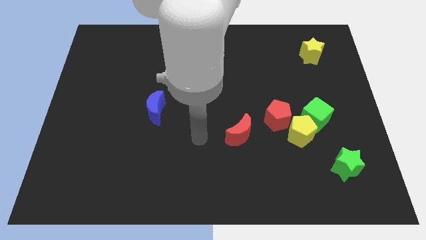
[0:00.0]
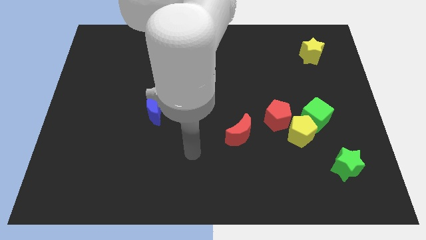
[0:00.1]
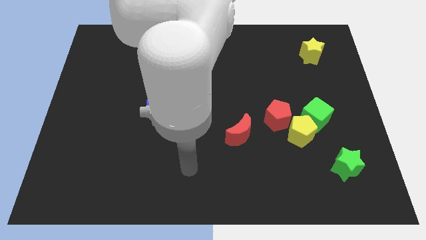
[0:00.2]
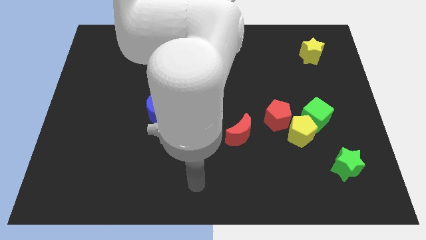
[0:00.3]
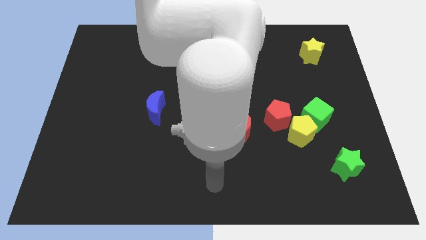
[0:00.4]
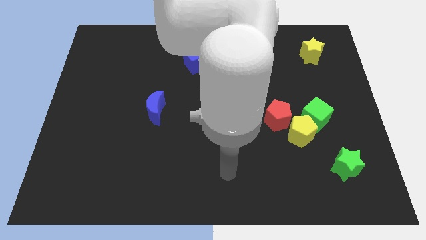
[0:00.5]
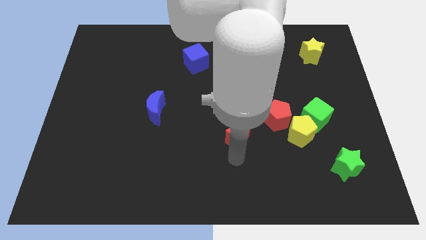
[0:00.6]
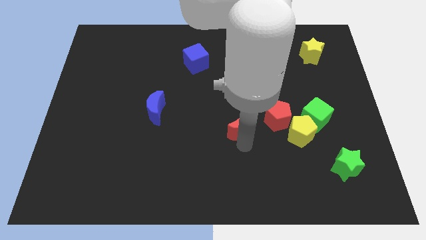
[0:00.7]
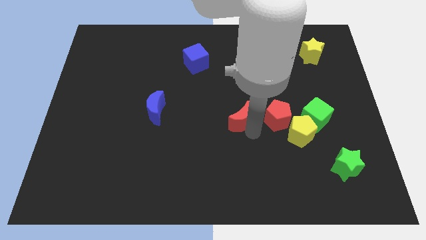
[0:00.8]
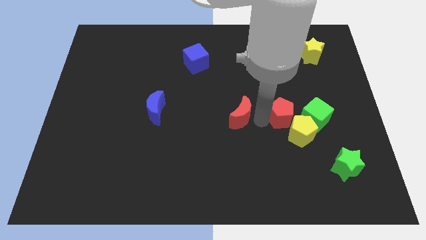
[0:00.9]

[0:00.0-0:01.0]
slightly move the red moon upwards

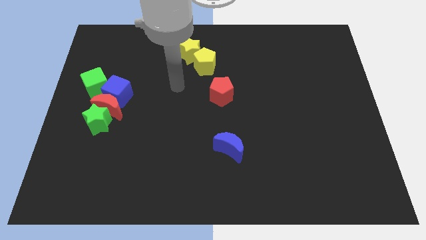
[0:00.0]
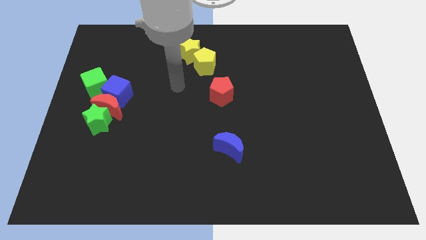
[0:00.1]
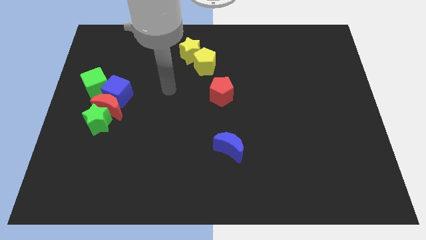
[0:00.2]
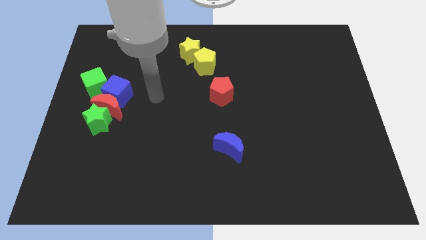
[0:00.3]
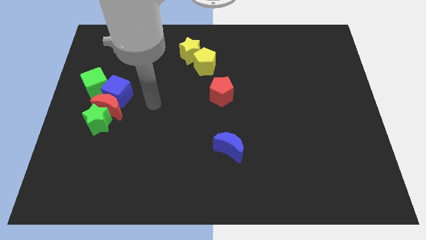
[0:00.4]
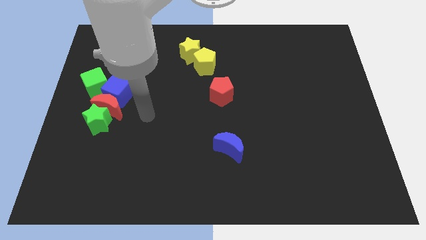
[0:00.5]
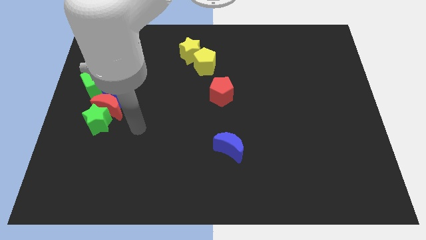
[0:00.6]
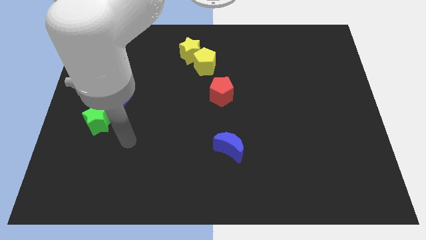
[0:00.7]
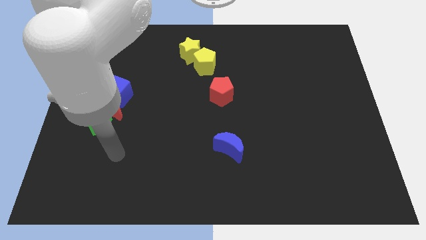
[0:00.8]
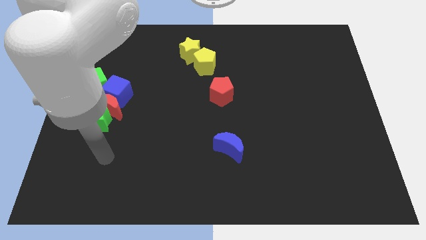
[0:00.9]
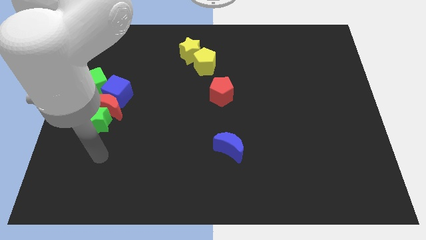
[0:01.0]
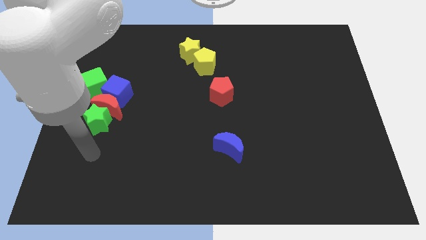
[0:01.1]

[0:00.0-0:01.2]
move your arm to the bottom side of the green star

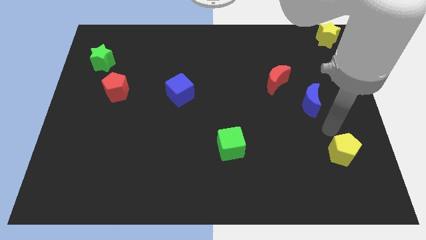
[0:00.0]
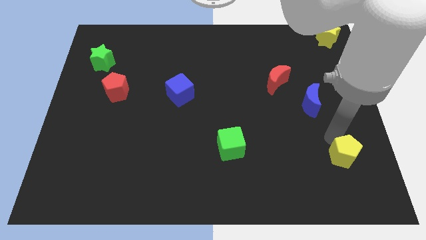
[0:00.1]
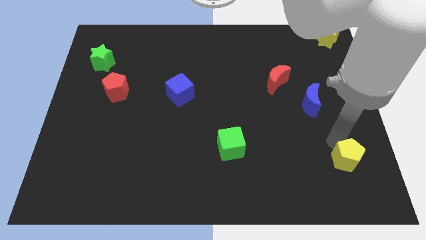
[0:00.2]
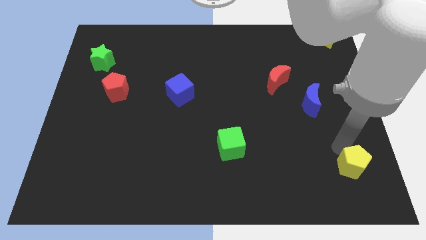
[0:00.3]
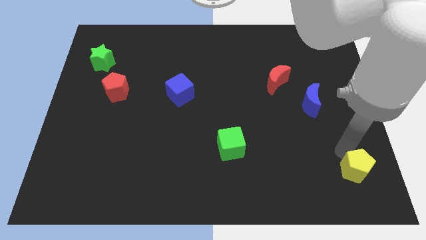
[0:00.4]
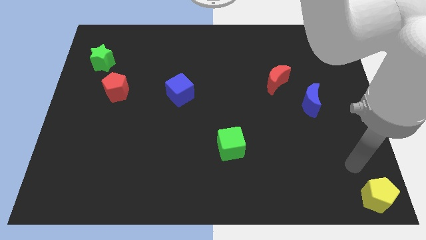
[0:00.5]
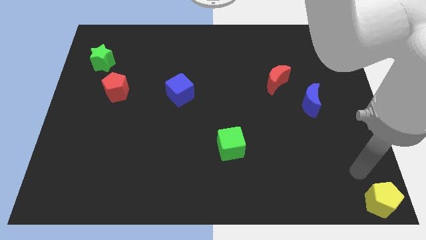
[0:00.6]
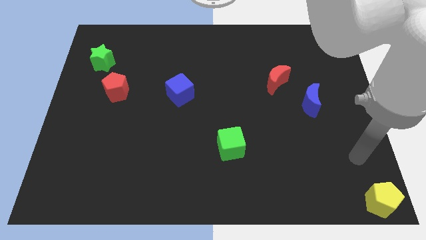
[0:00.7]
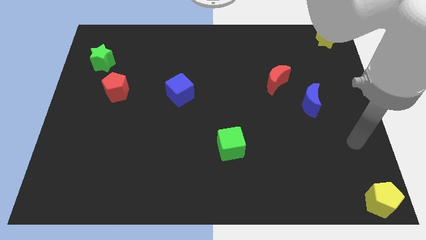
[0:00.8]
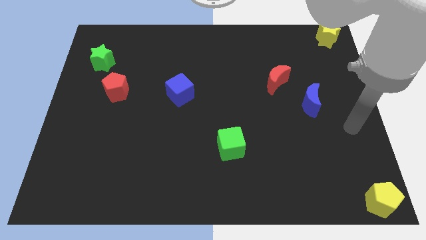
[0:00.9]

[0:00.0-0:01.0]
move the yellow pentagon to the bottom corner of the board

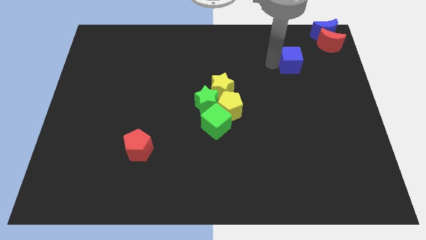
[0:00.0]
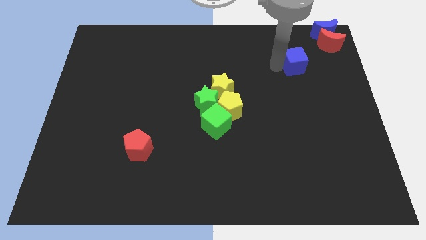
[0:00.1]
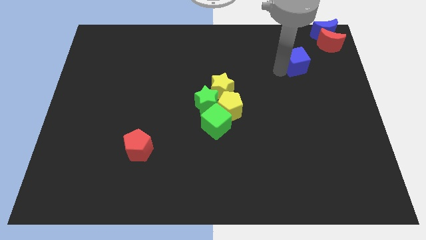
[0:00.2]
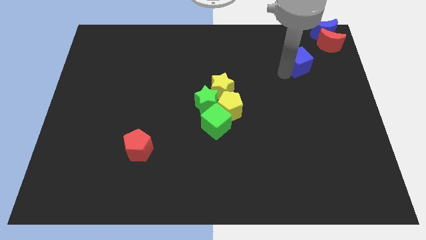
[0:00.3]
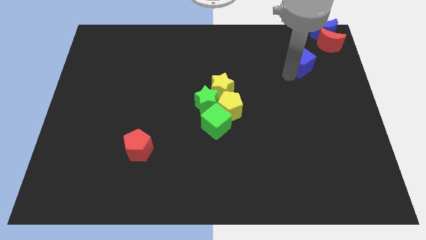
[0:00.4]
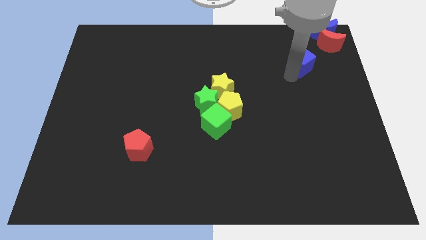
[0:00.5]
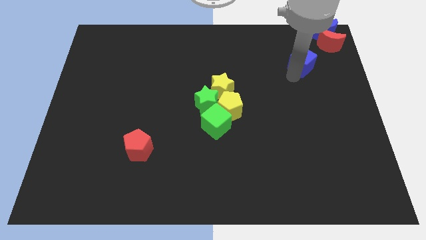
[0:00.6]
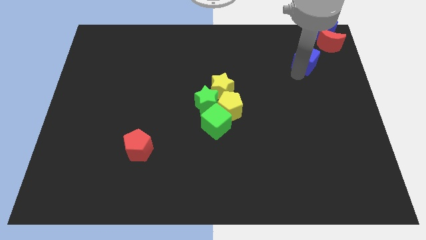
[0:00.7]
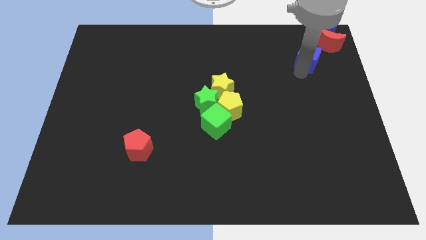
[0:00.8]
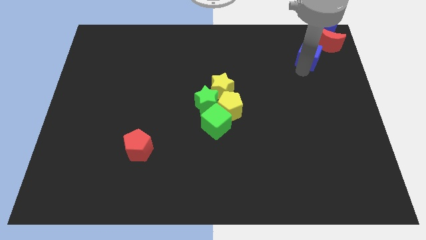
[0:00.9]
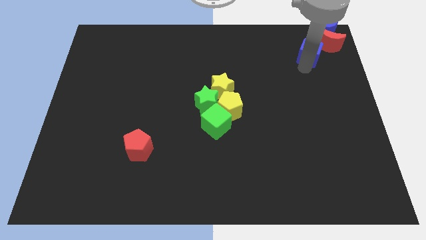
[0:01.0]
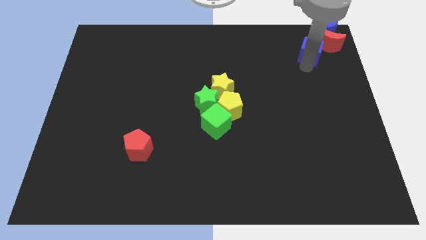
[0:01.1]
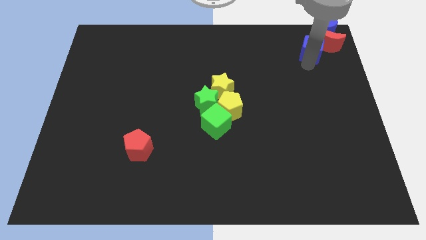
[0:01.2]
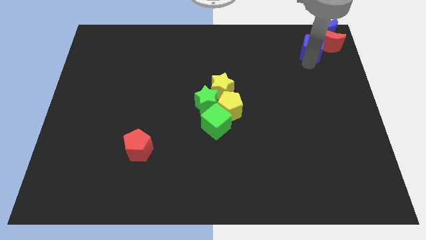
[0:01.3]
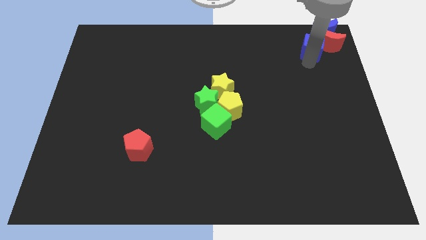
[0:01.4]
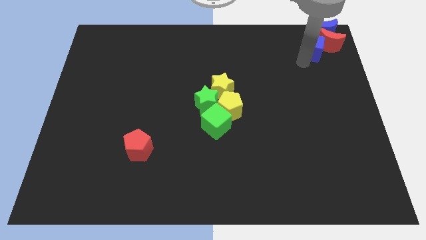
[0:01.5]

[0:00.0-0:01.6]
place the blue cube to the bottom left of the red crescent

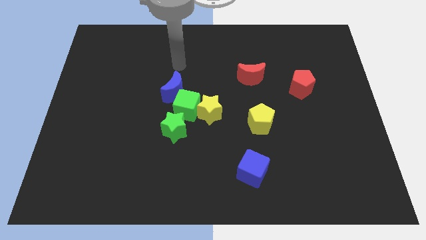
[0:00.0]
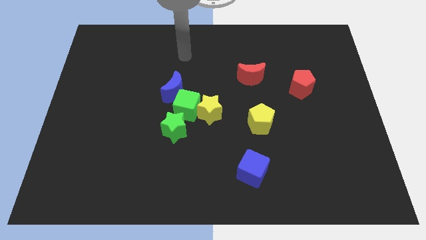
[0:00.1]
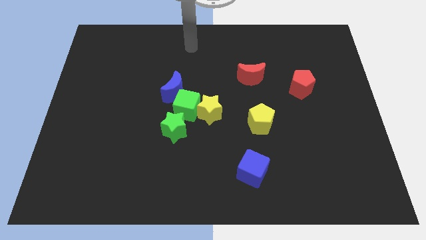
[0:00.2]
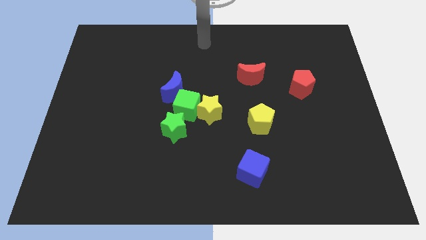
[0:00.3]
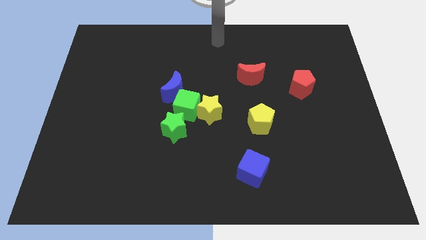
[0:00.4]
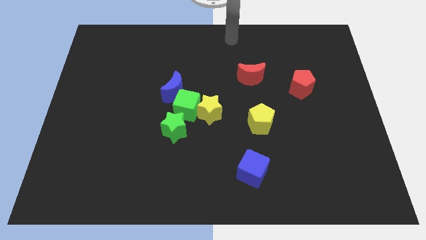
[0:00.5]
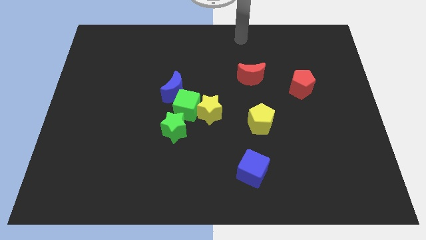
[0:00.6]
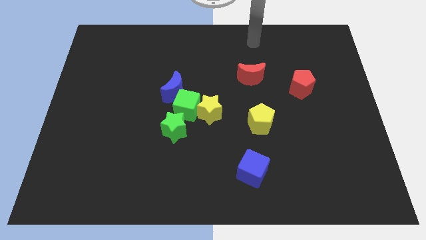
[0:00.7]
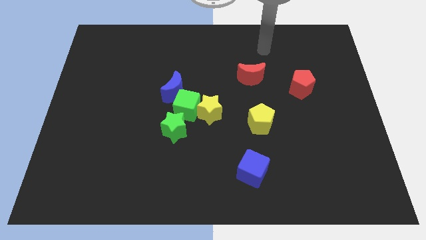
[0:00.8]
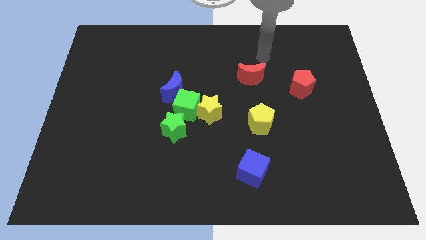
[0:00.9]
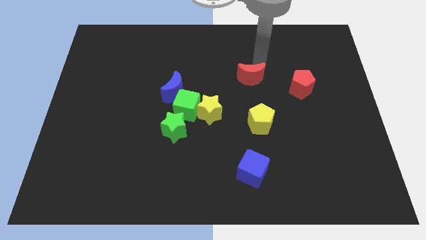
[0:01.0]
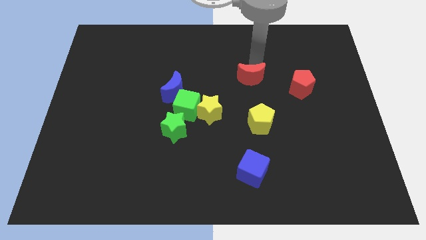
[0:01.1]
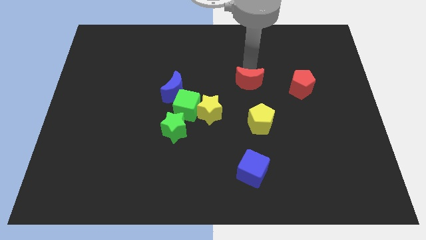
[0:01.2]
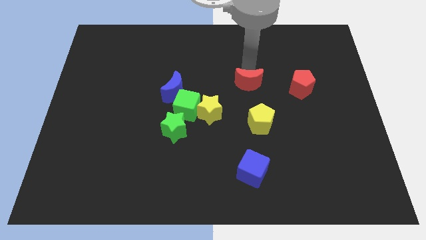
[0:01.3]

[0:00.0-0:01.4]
slide the red moon slightly to the bottom

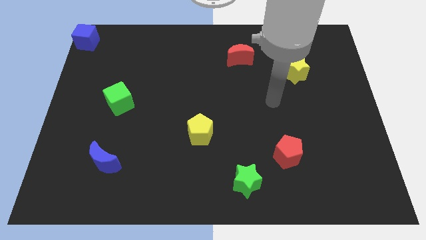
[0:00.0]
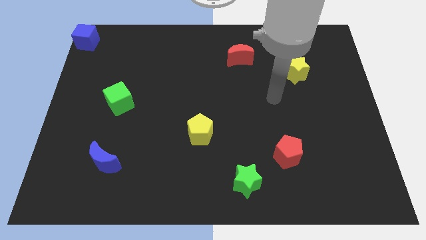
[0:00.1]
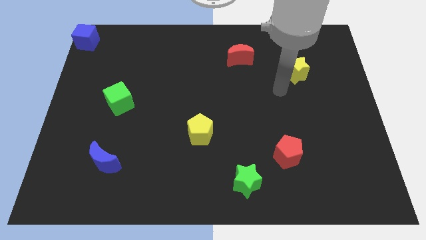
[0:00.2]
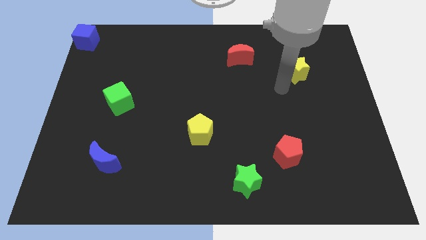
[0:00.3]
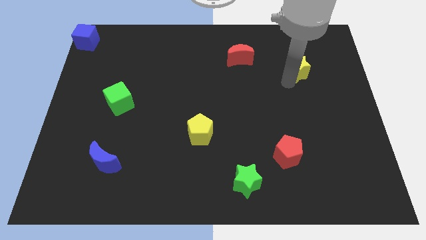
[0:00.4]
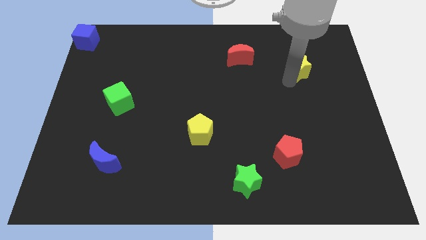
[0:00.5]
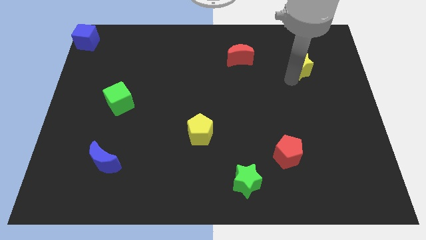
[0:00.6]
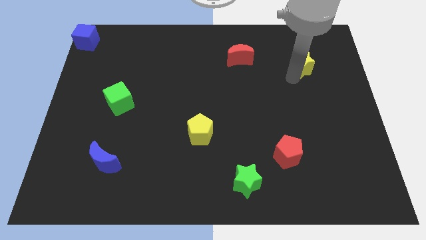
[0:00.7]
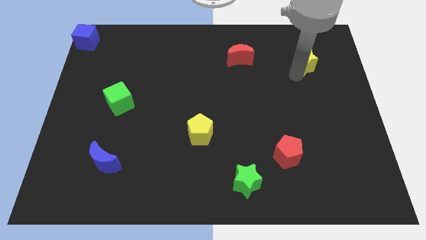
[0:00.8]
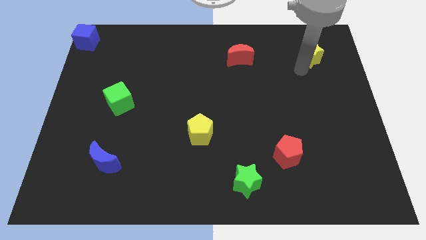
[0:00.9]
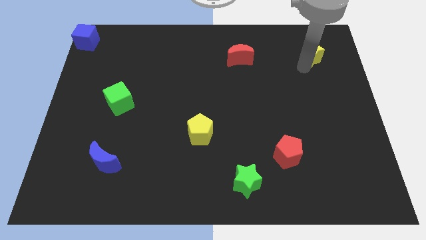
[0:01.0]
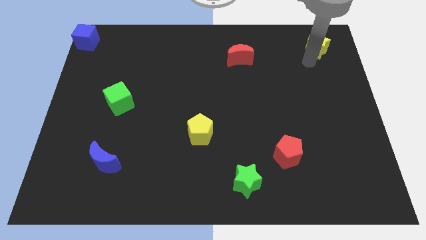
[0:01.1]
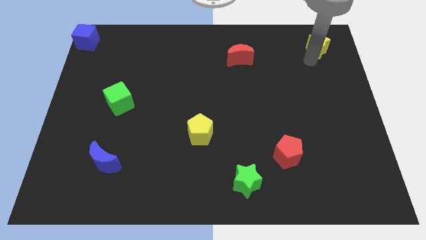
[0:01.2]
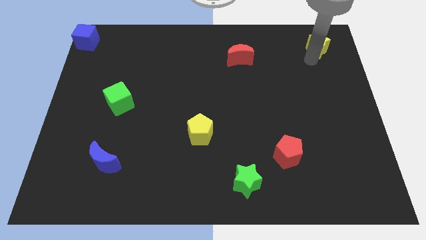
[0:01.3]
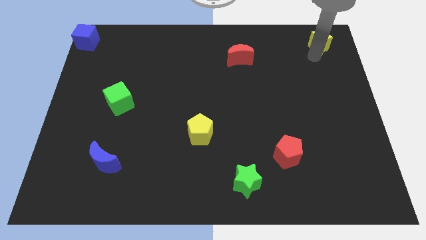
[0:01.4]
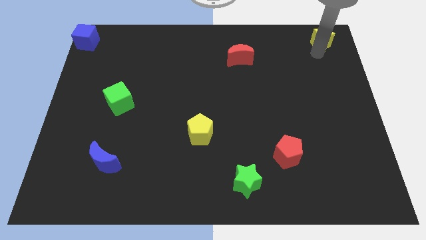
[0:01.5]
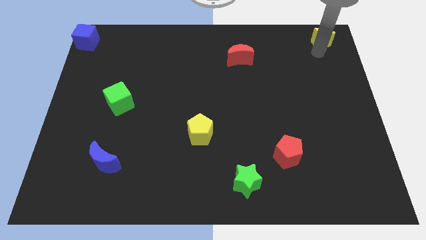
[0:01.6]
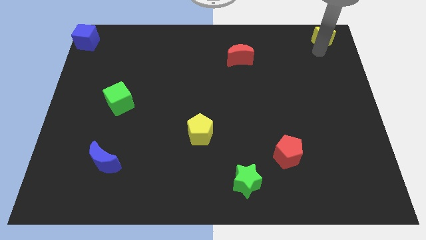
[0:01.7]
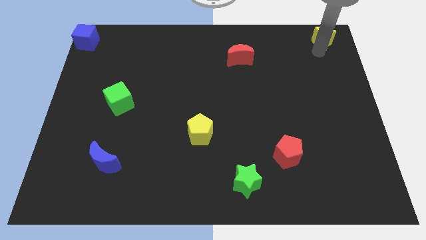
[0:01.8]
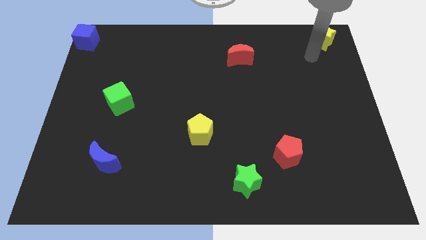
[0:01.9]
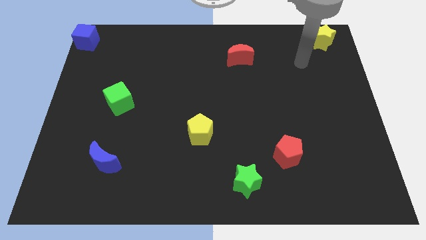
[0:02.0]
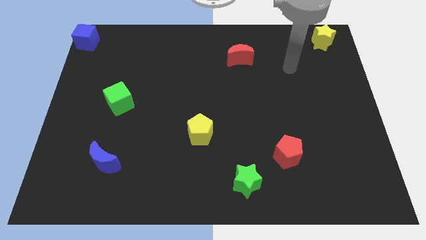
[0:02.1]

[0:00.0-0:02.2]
push the yellow star towards the top right side of the board

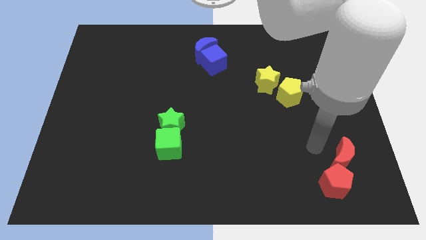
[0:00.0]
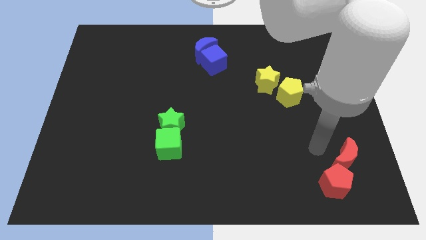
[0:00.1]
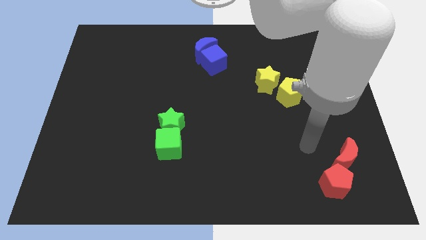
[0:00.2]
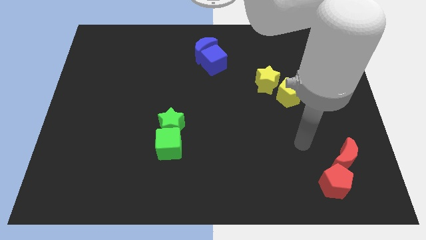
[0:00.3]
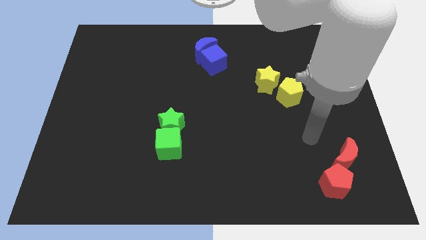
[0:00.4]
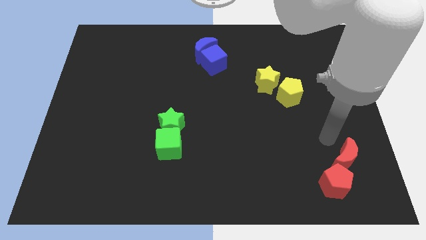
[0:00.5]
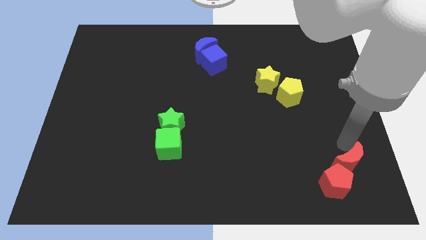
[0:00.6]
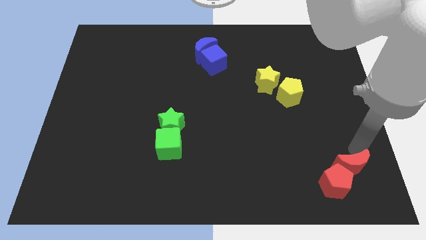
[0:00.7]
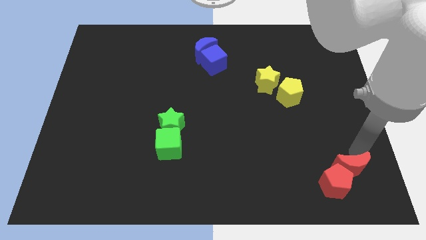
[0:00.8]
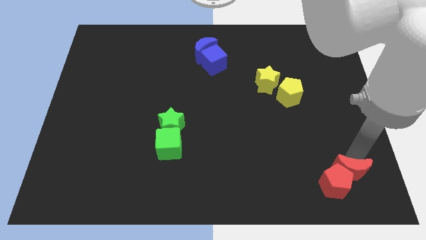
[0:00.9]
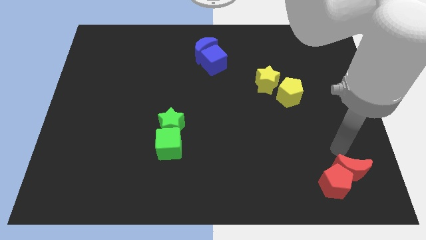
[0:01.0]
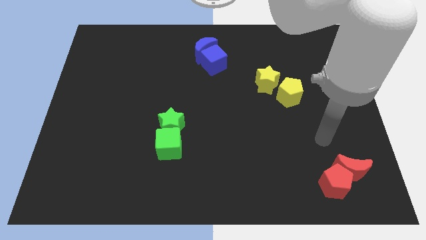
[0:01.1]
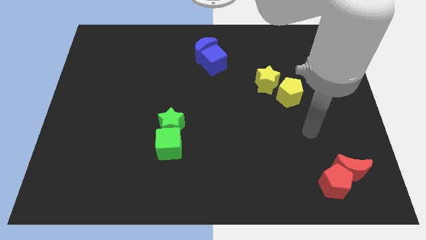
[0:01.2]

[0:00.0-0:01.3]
move the red crescent to the right of the red pentagon
